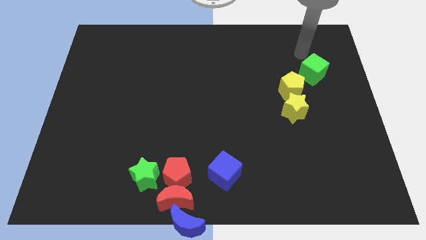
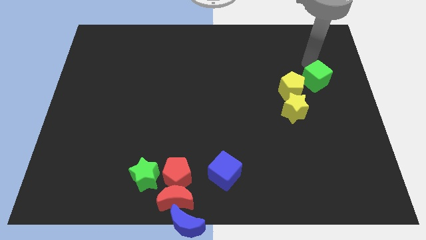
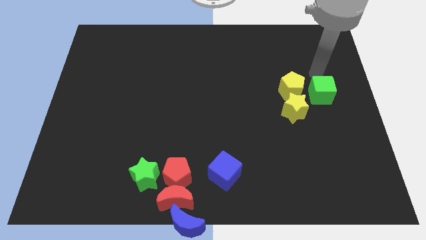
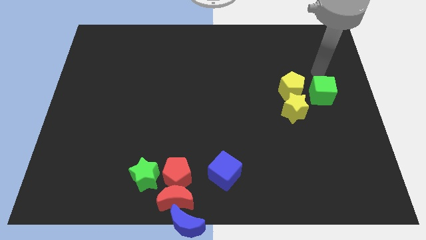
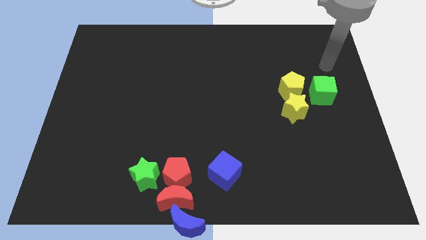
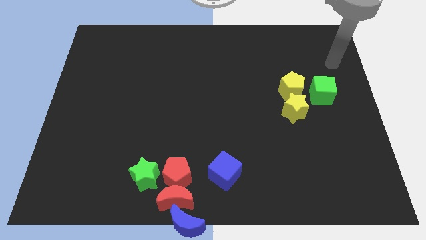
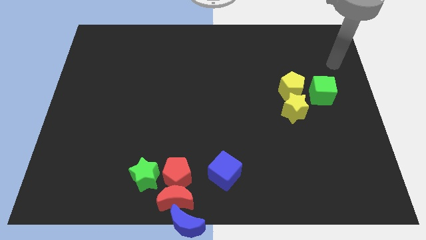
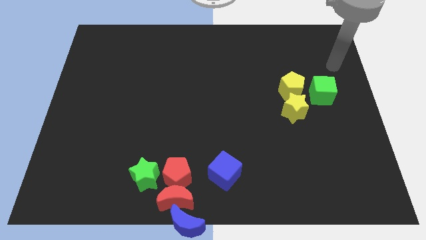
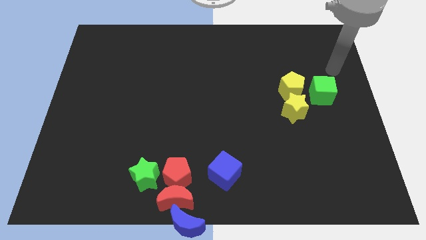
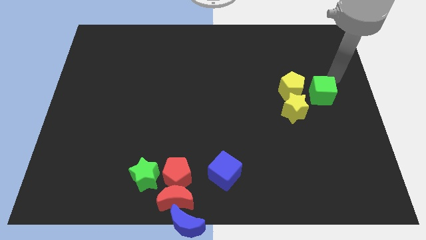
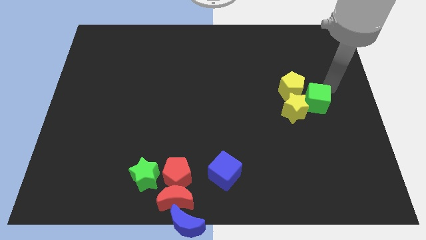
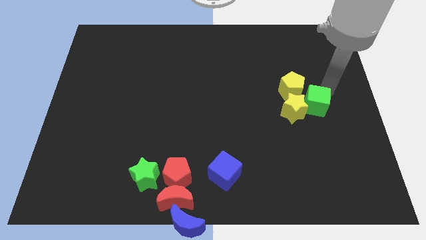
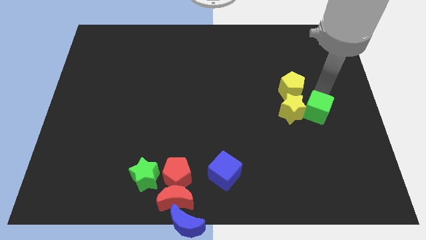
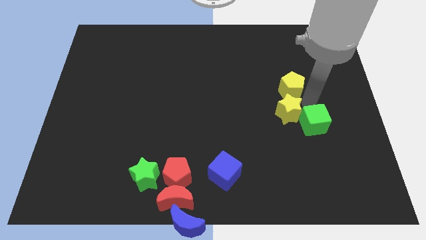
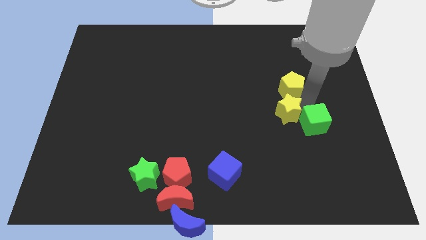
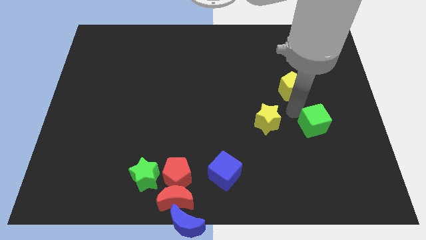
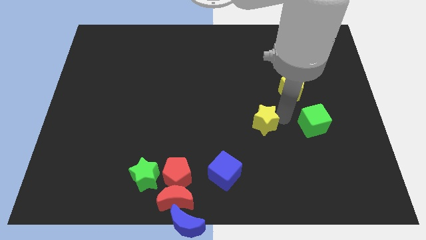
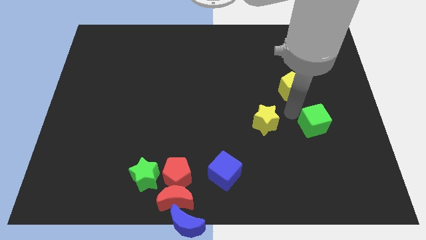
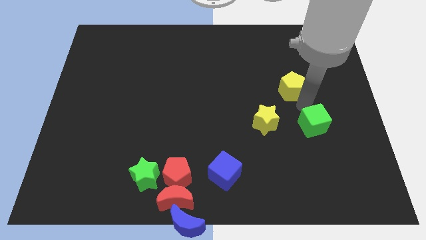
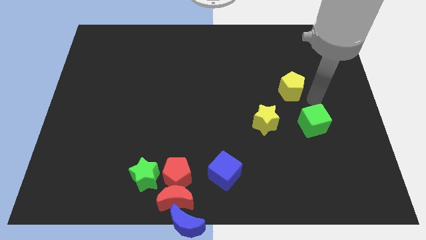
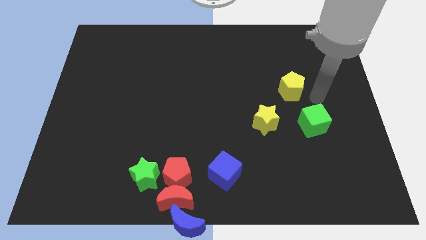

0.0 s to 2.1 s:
slightly push the green cube and yellow star towards bottom

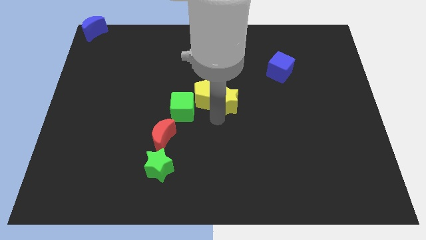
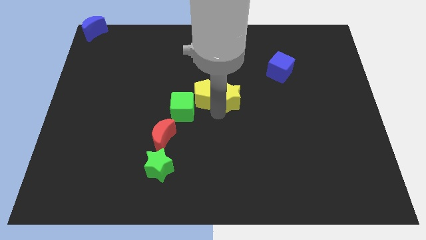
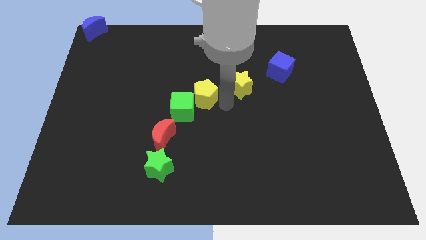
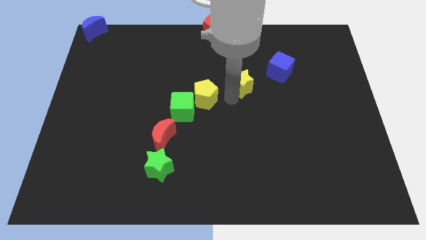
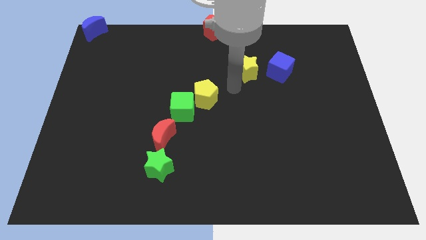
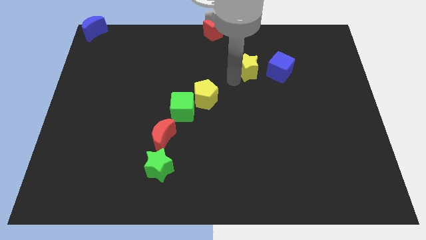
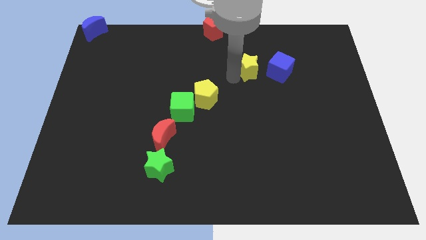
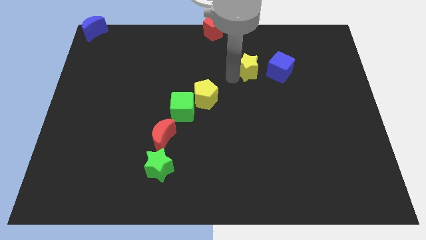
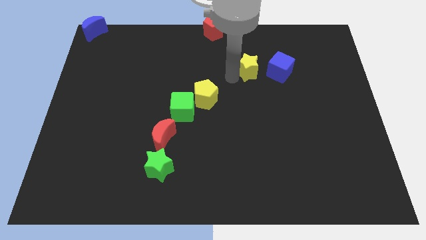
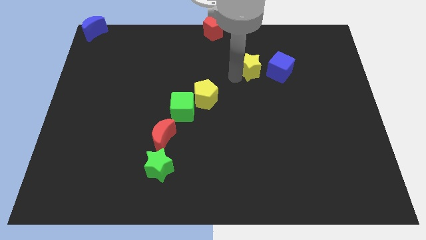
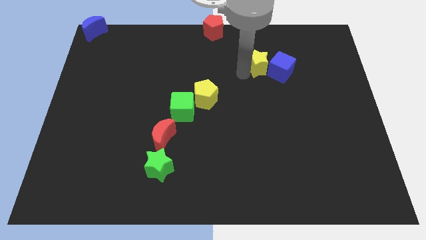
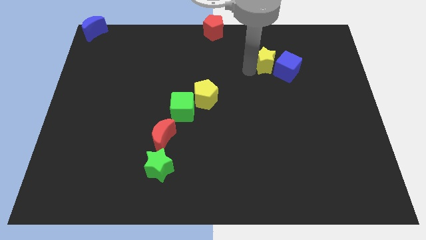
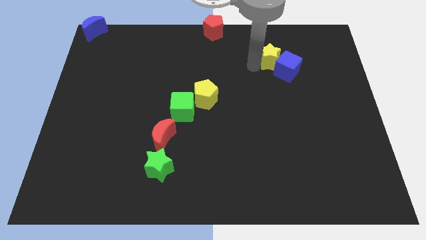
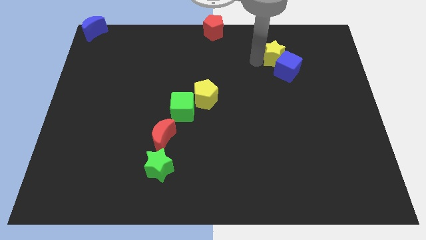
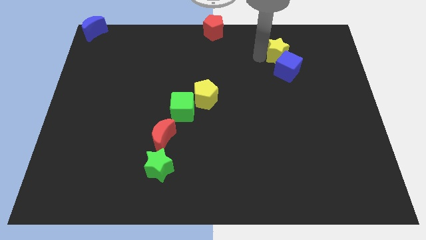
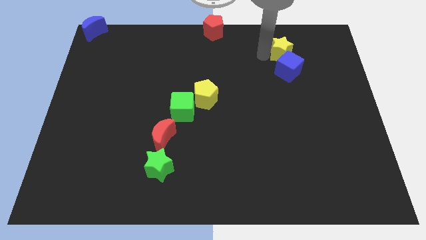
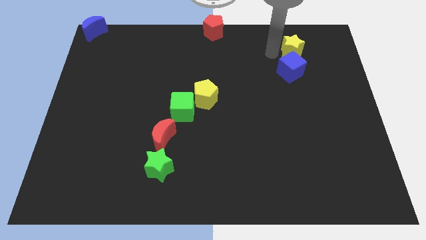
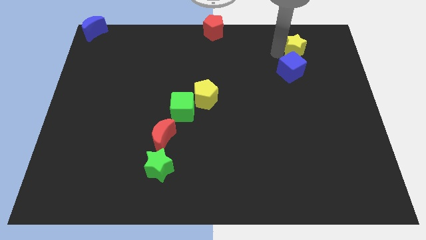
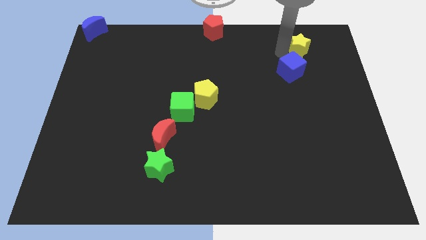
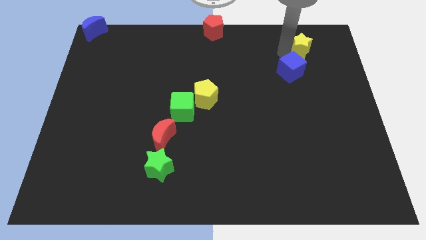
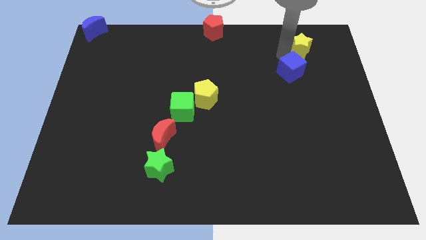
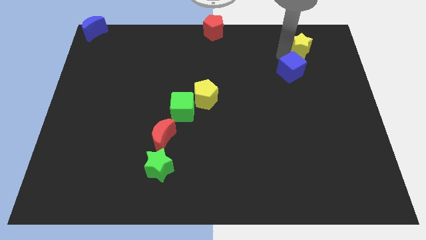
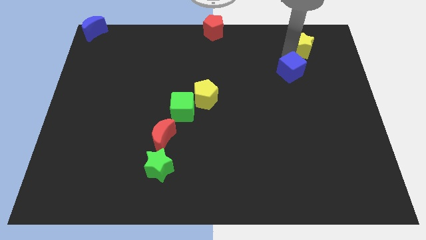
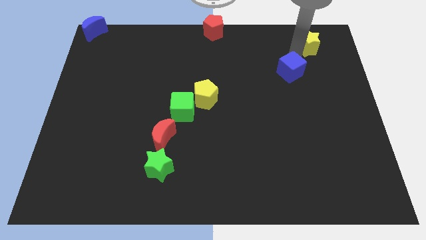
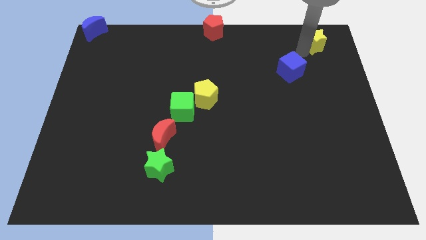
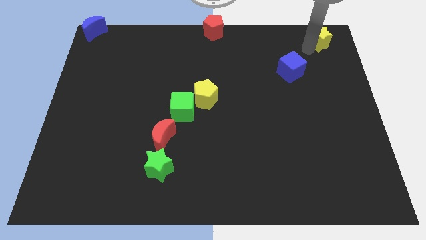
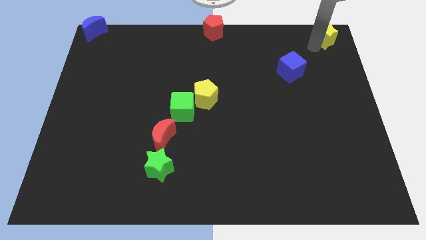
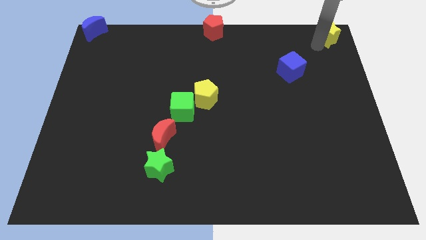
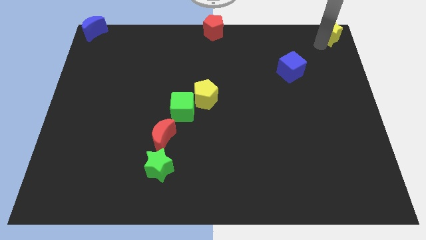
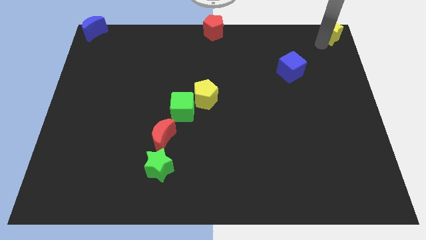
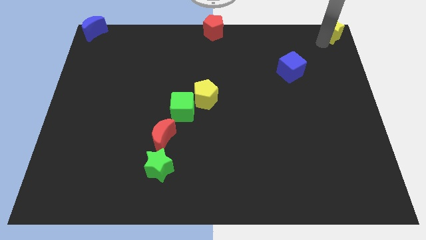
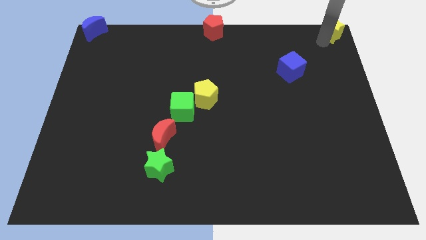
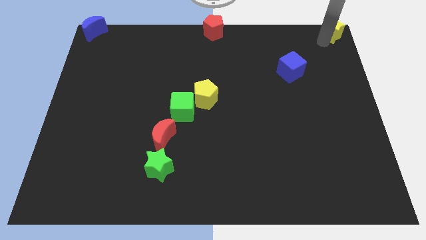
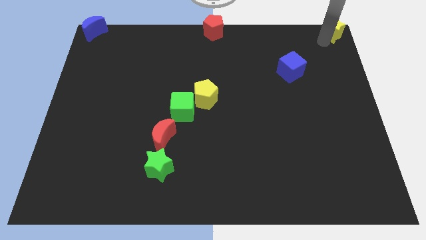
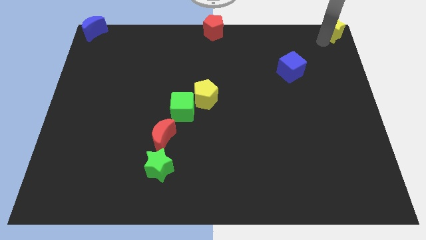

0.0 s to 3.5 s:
move the yellow star to the top right of the board

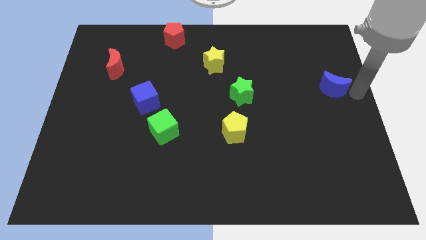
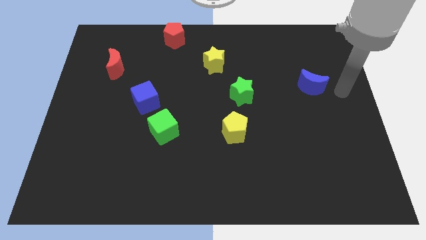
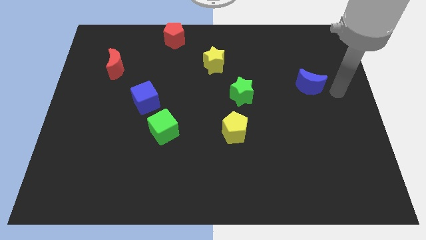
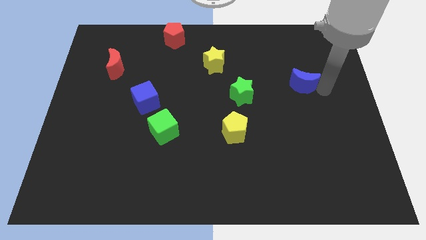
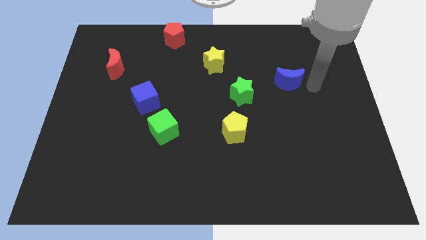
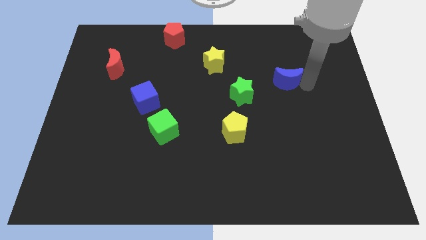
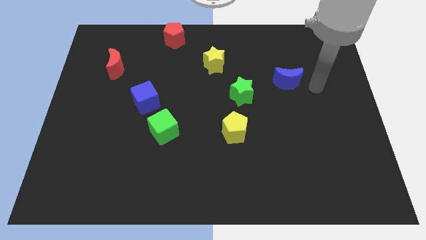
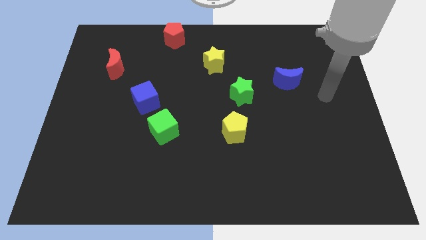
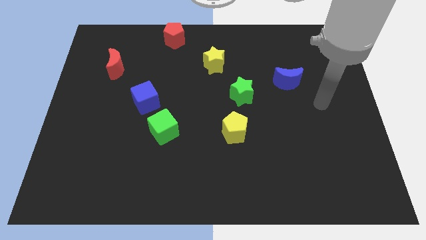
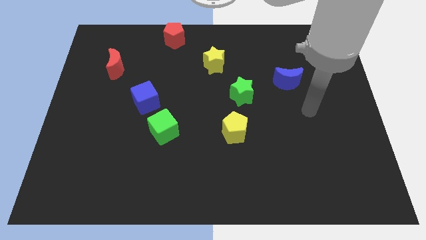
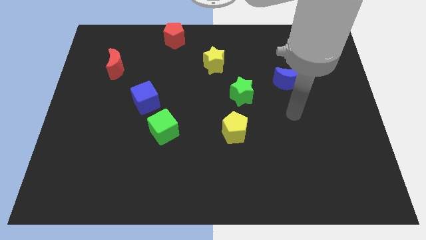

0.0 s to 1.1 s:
slide blue moon towards green star

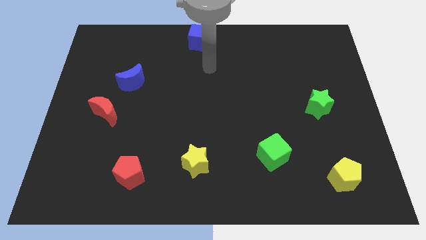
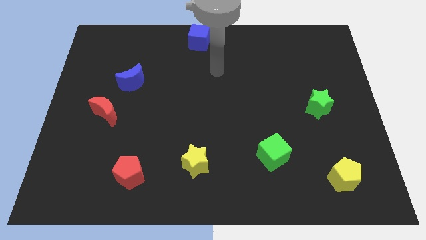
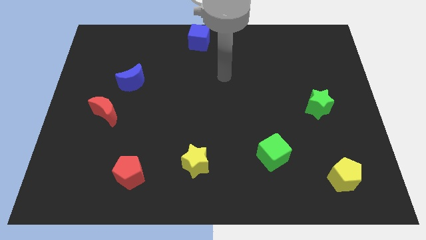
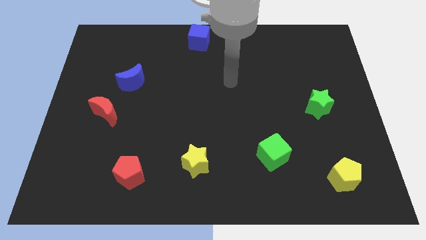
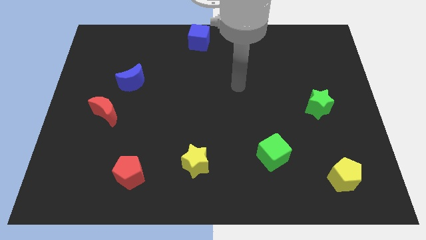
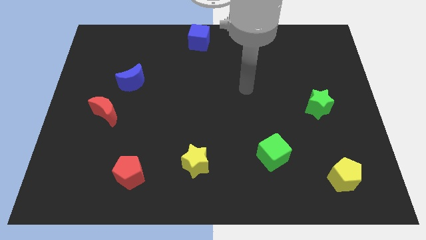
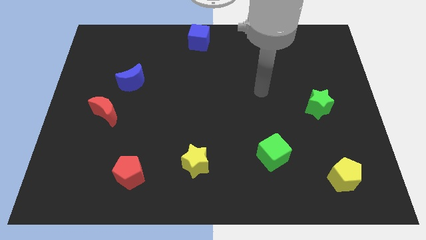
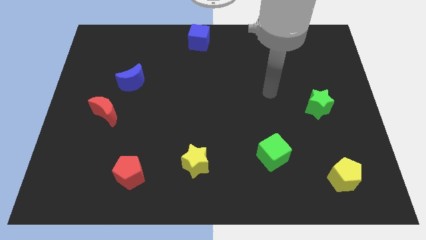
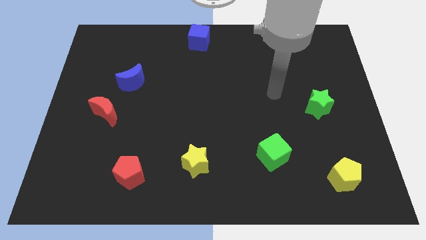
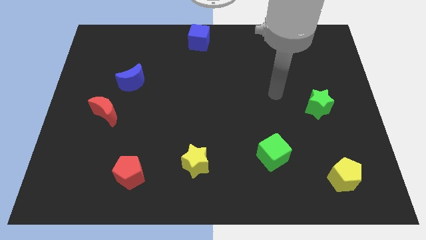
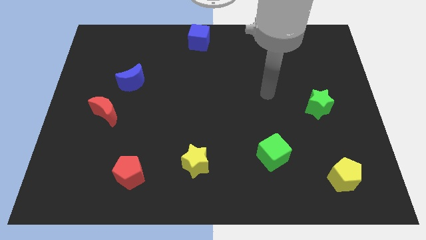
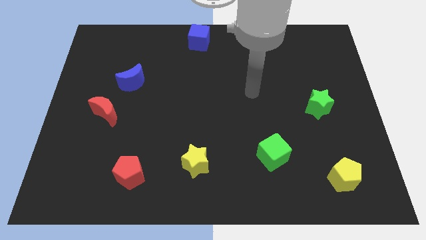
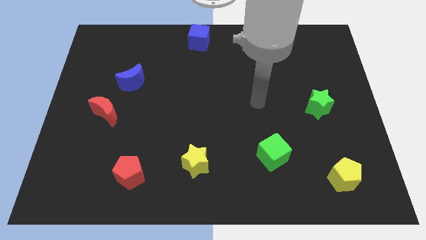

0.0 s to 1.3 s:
move your arm to the center

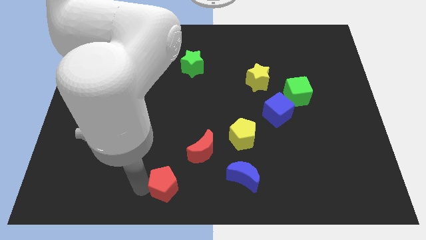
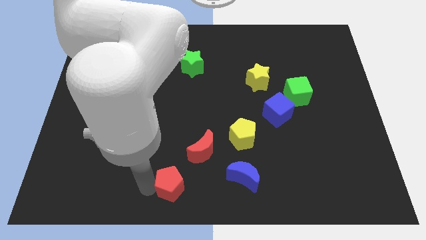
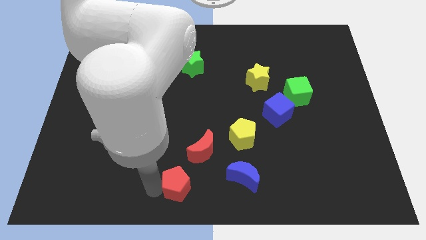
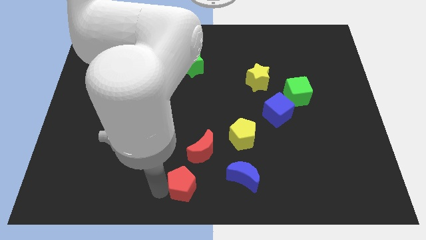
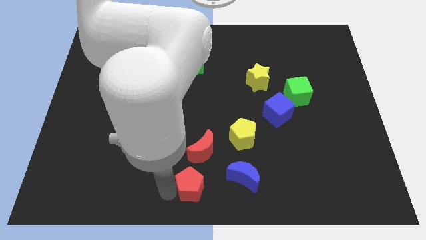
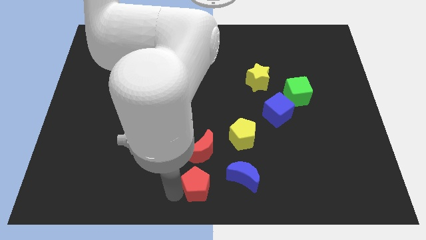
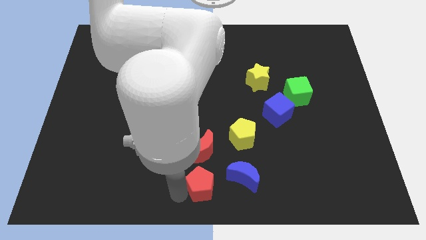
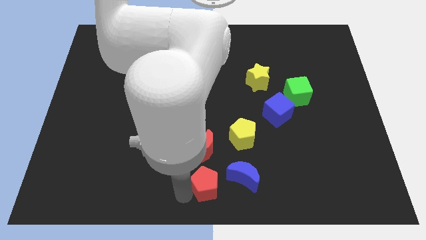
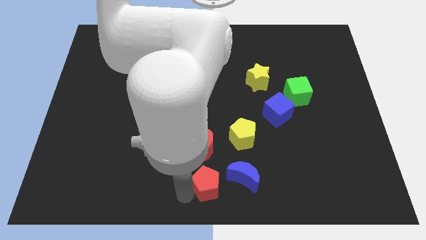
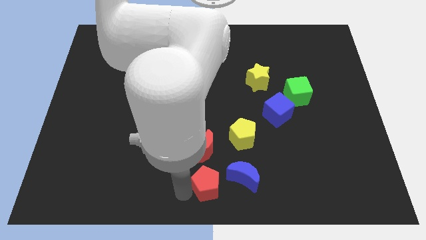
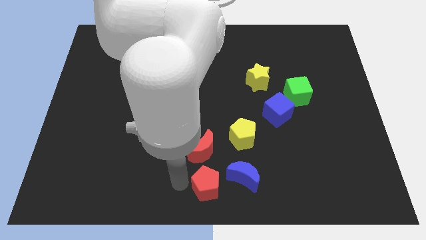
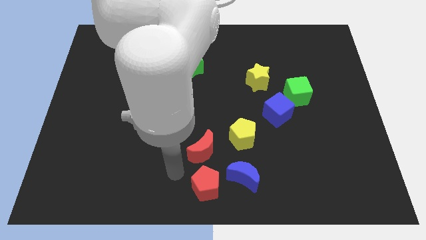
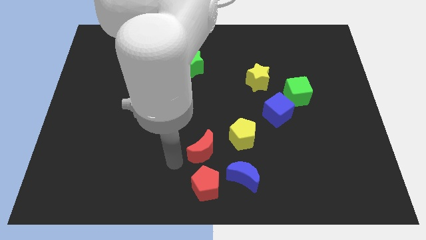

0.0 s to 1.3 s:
place red pentagon opposite to blue crescent
